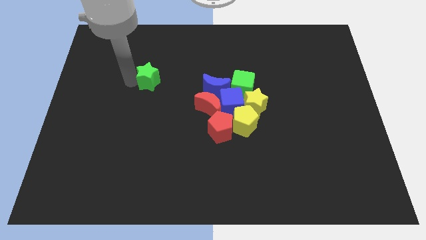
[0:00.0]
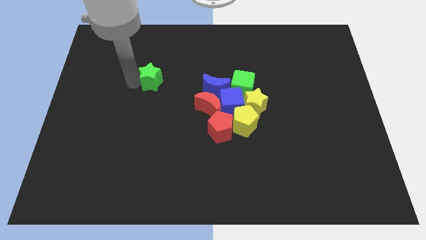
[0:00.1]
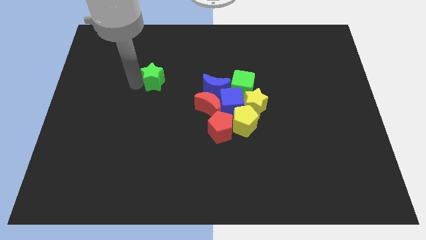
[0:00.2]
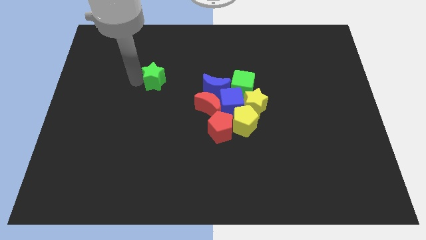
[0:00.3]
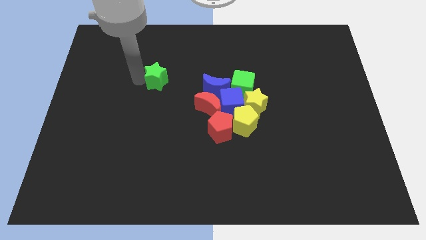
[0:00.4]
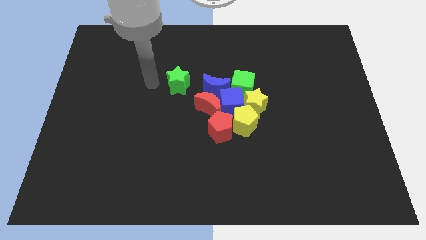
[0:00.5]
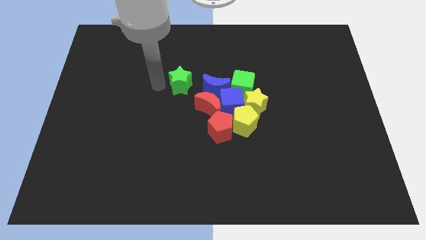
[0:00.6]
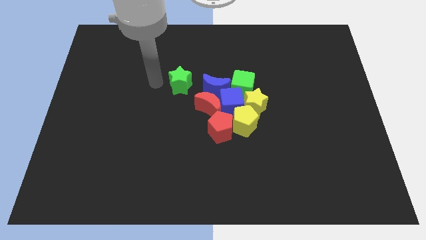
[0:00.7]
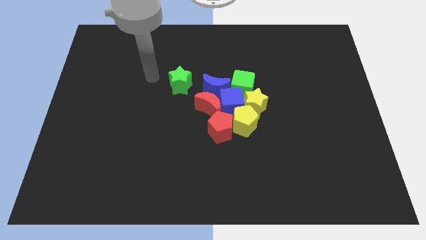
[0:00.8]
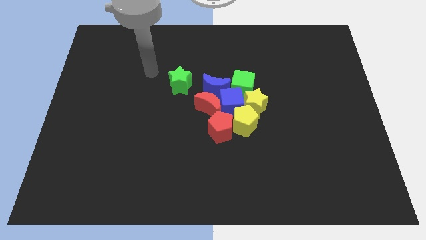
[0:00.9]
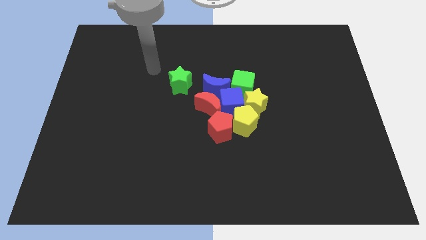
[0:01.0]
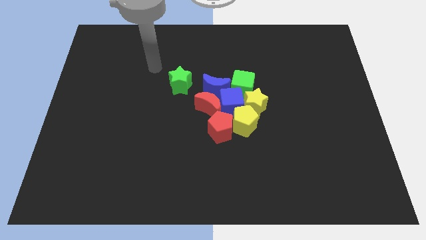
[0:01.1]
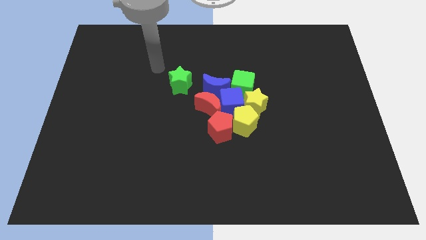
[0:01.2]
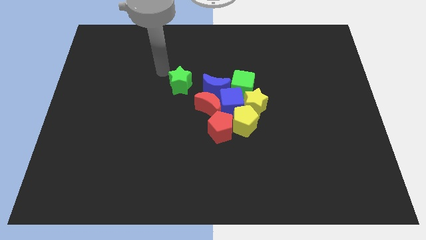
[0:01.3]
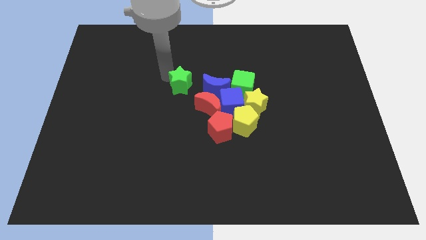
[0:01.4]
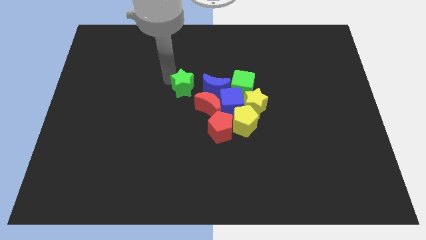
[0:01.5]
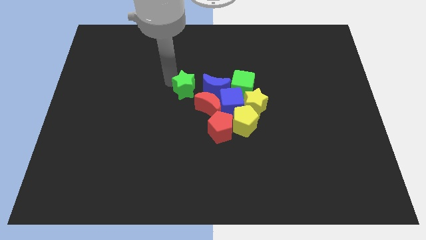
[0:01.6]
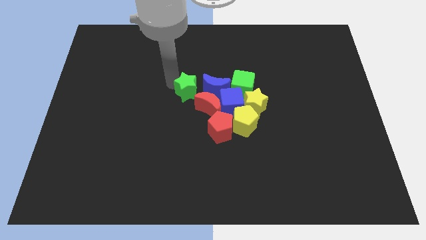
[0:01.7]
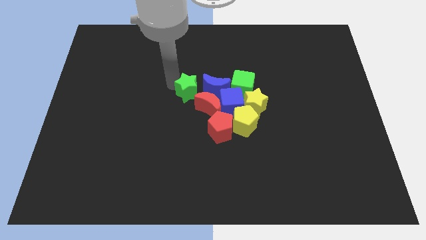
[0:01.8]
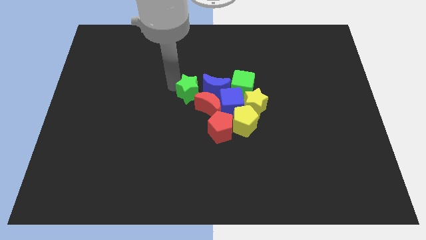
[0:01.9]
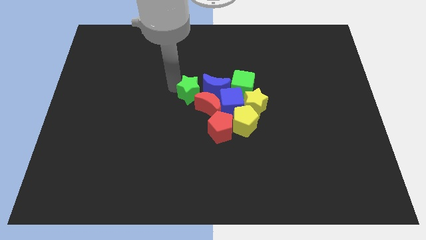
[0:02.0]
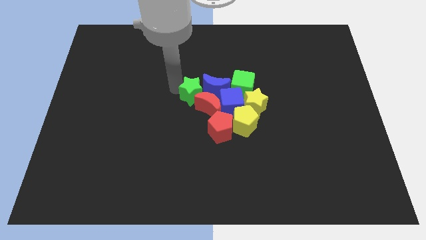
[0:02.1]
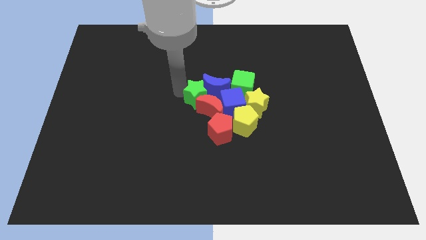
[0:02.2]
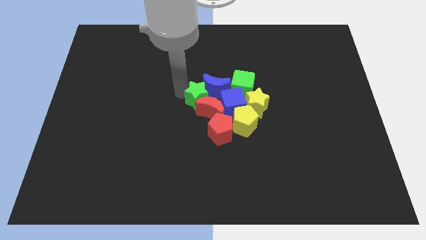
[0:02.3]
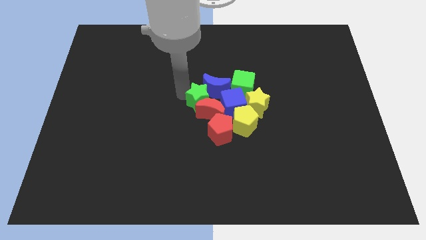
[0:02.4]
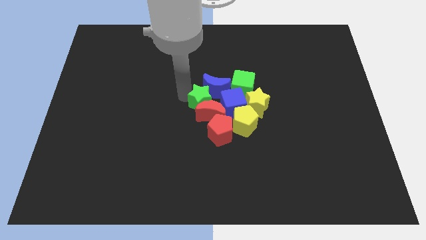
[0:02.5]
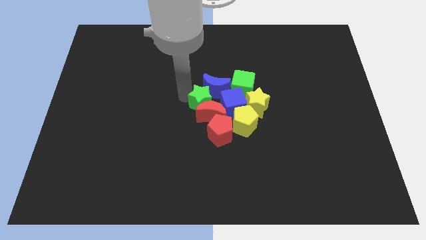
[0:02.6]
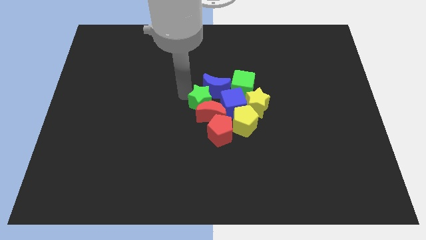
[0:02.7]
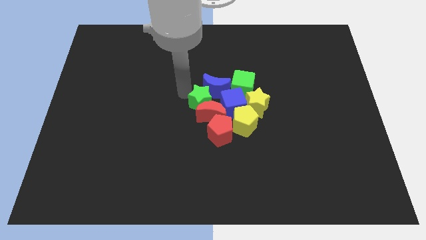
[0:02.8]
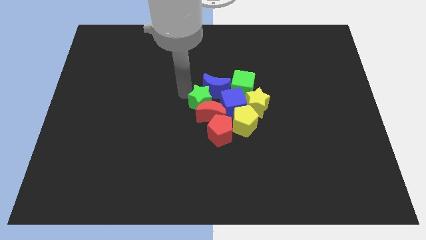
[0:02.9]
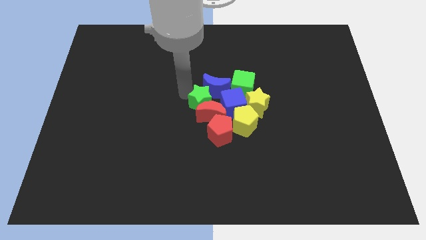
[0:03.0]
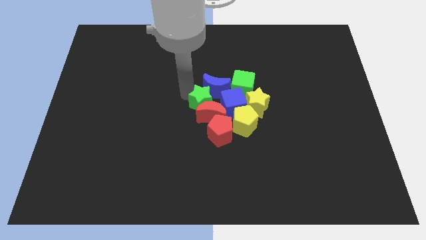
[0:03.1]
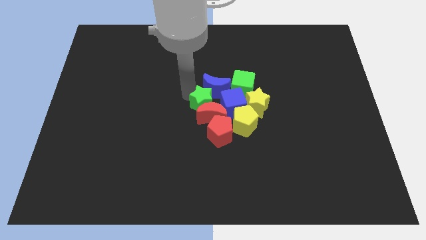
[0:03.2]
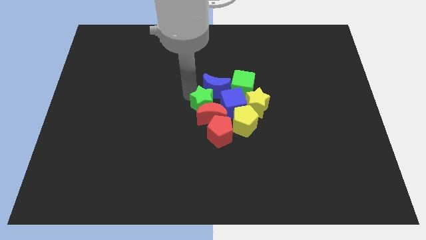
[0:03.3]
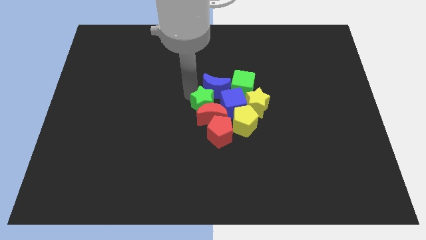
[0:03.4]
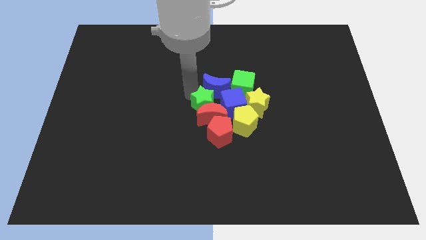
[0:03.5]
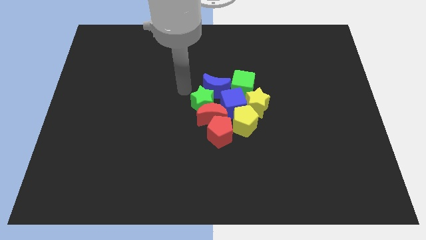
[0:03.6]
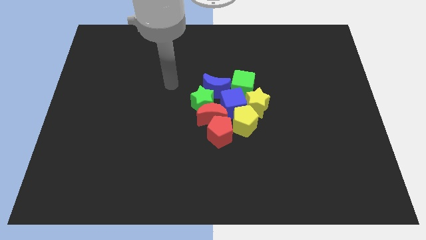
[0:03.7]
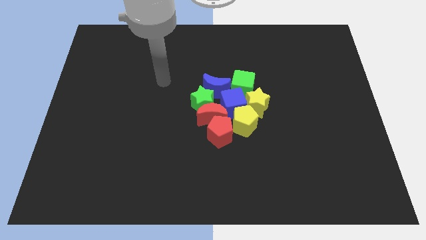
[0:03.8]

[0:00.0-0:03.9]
place the green star above the red crescent

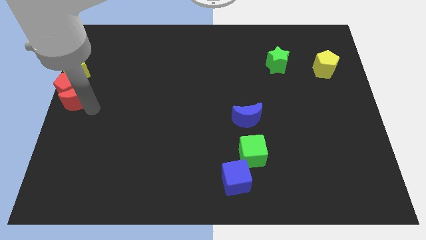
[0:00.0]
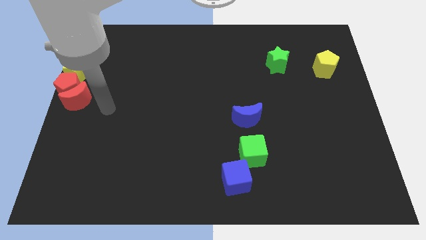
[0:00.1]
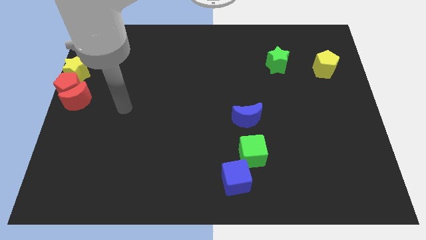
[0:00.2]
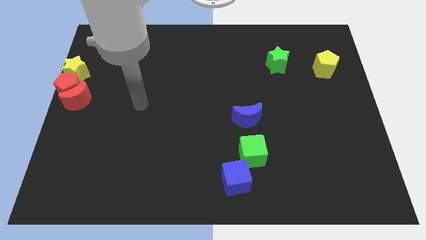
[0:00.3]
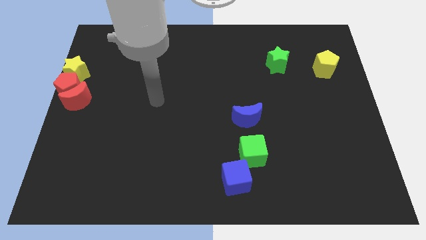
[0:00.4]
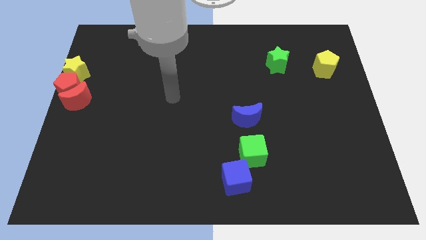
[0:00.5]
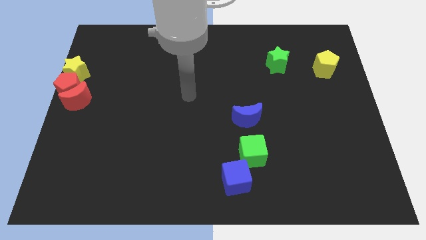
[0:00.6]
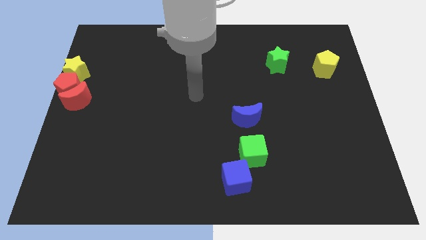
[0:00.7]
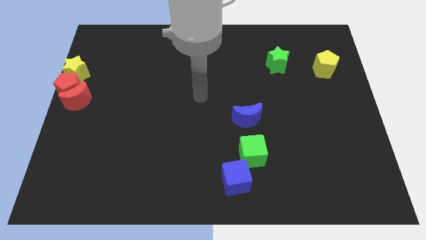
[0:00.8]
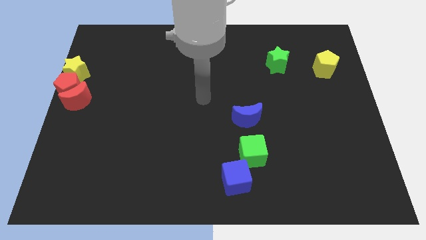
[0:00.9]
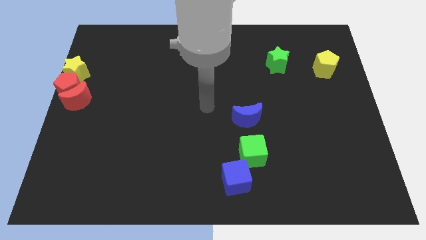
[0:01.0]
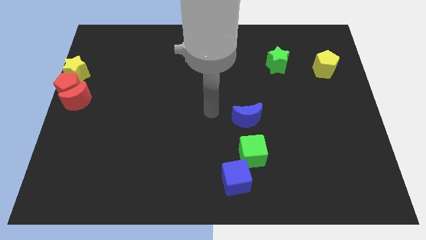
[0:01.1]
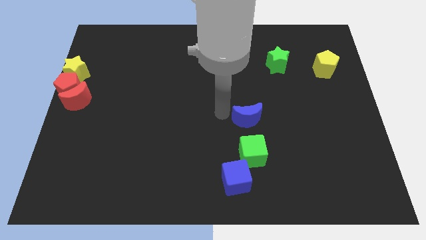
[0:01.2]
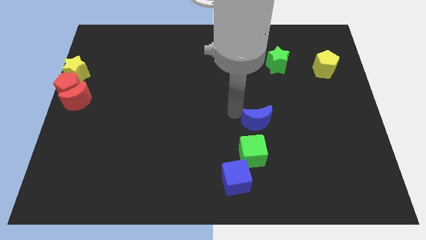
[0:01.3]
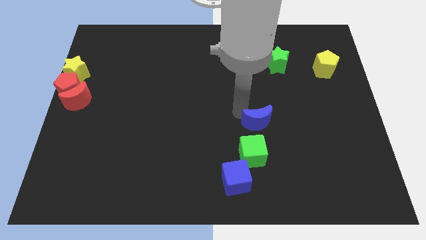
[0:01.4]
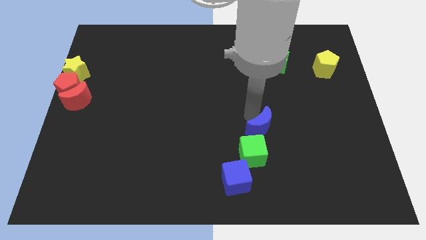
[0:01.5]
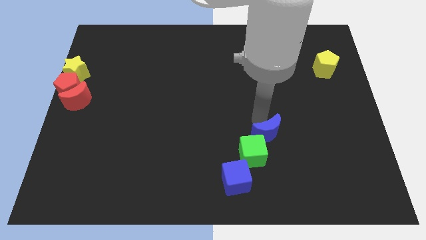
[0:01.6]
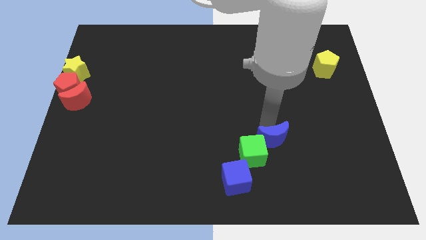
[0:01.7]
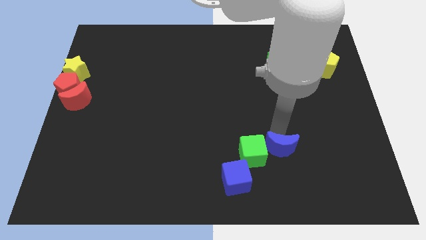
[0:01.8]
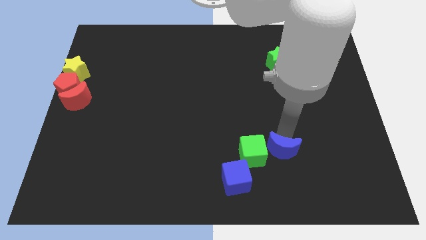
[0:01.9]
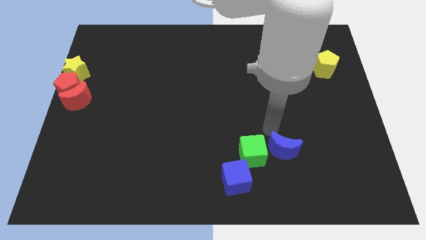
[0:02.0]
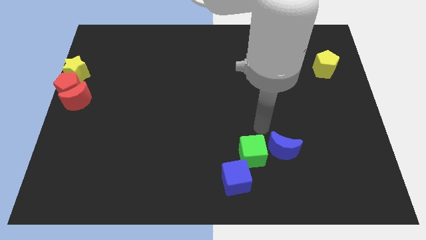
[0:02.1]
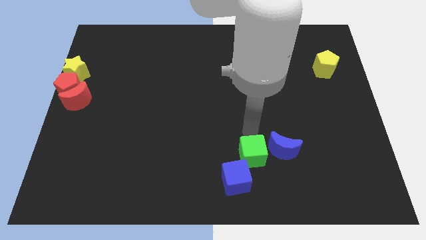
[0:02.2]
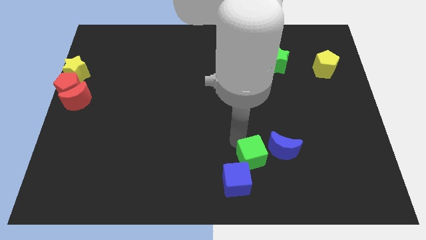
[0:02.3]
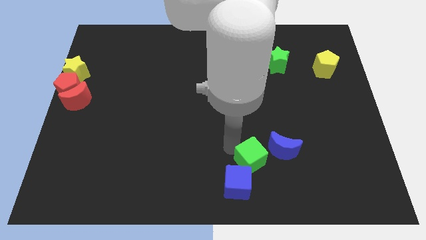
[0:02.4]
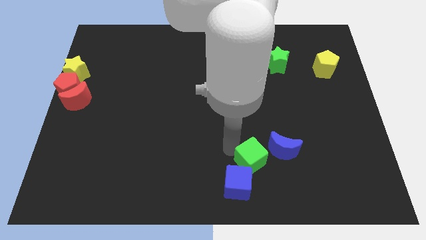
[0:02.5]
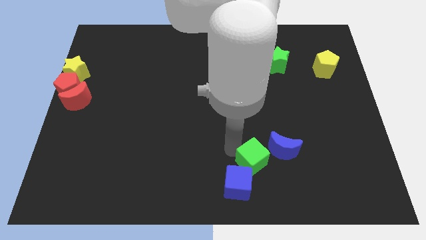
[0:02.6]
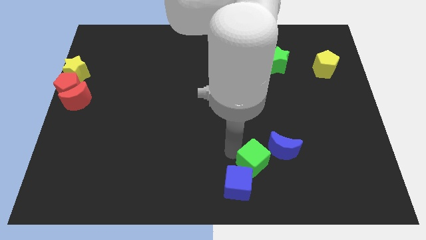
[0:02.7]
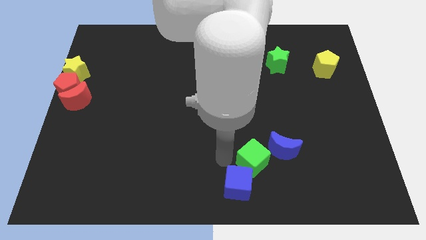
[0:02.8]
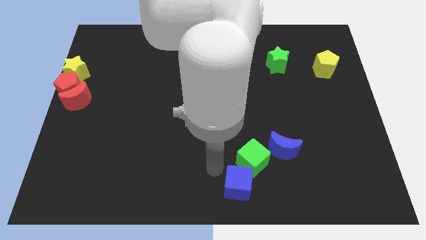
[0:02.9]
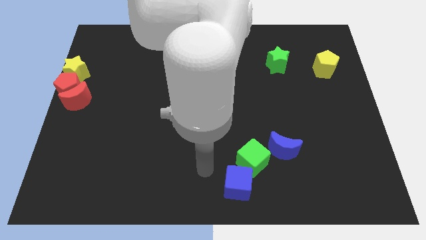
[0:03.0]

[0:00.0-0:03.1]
place the blue crescent at right side of the green cube

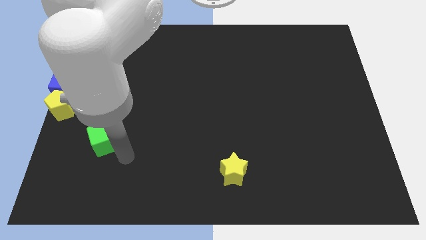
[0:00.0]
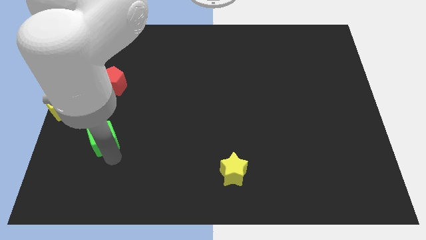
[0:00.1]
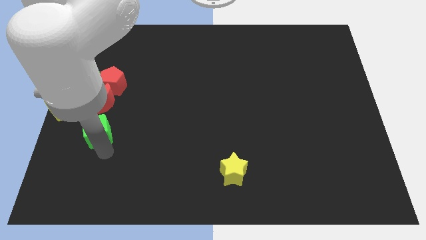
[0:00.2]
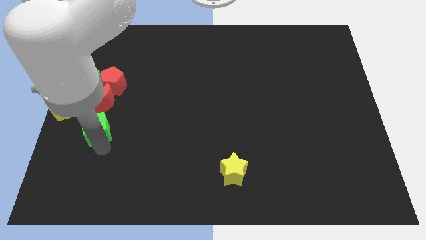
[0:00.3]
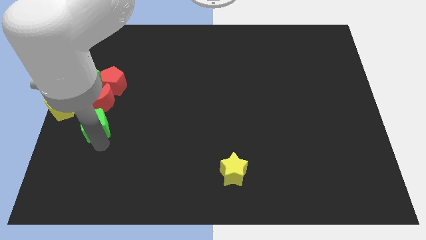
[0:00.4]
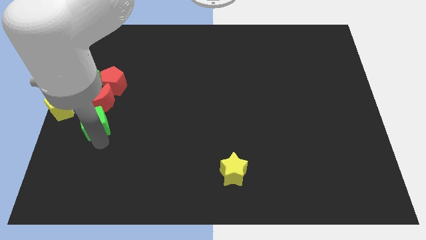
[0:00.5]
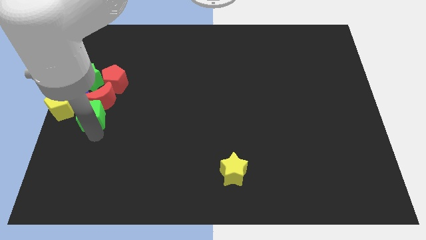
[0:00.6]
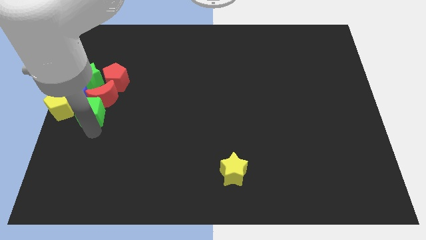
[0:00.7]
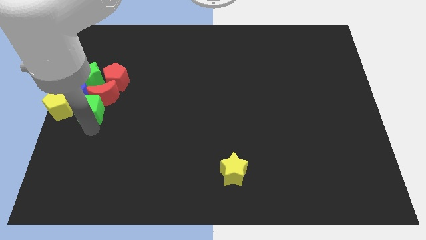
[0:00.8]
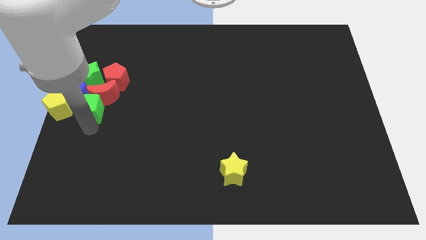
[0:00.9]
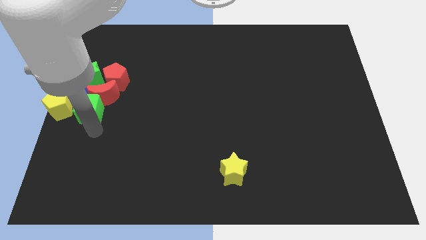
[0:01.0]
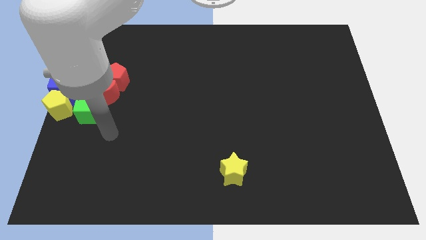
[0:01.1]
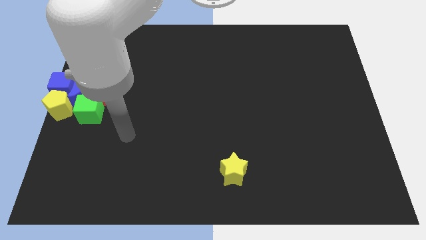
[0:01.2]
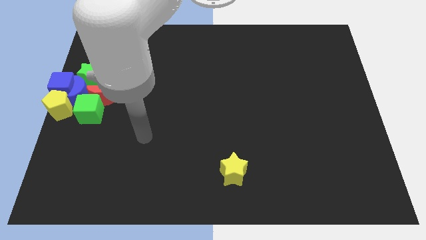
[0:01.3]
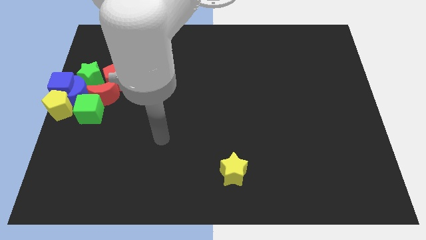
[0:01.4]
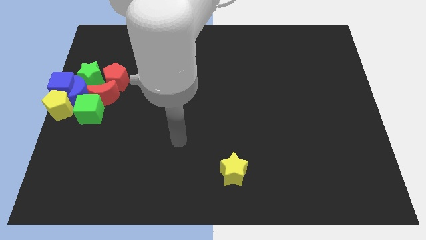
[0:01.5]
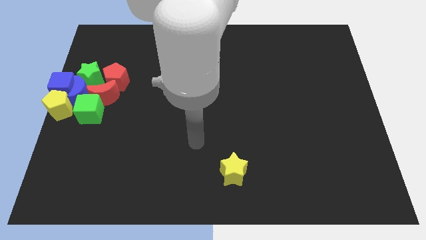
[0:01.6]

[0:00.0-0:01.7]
push the green cube into the red crescent

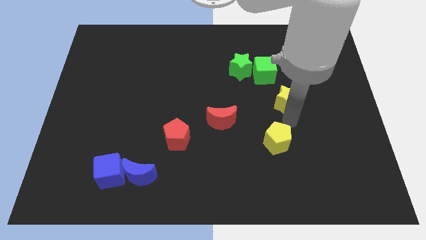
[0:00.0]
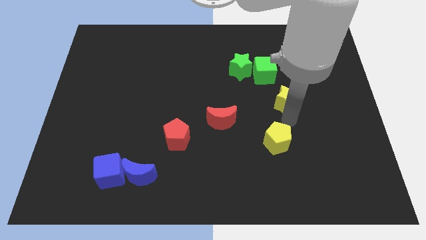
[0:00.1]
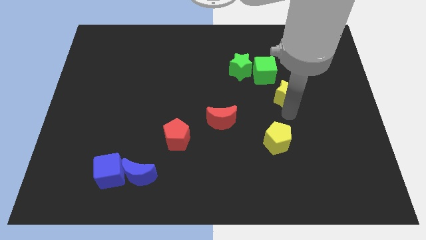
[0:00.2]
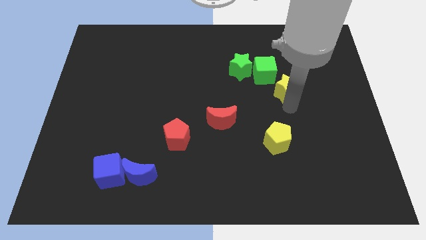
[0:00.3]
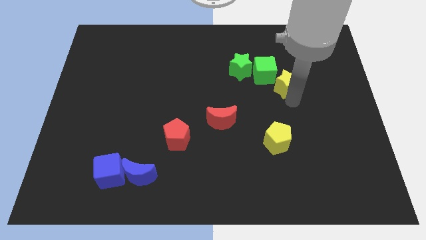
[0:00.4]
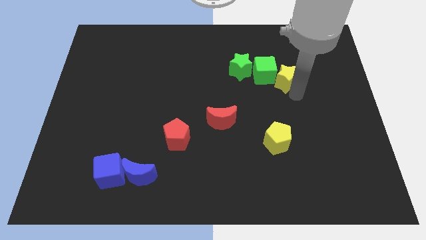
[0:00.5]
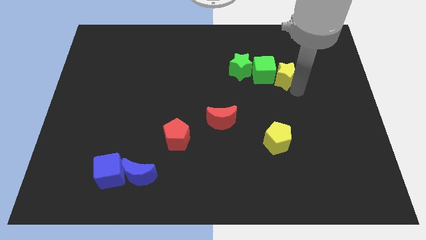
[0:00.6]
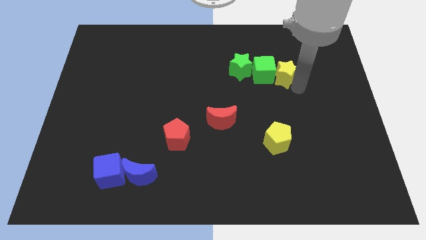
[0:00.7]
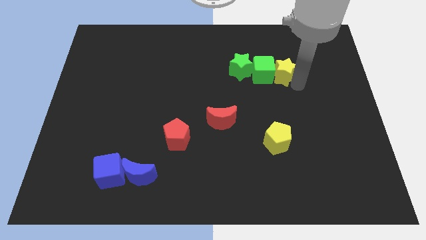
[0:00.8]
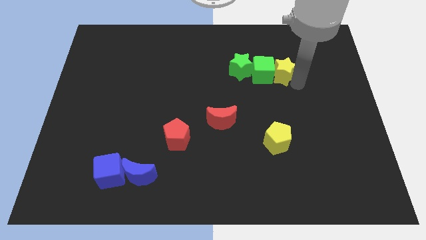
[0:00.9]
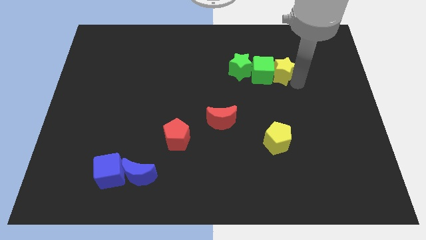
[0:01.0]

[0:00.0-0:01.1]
place yellow star adjacent to green cube
